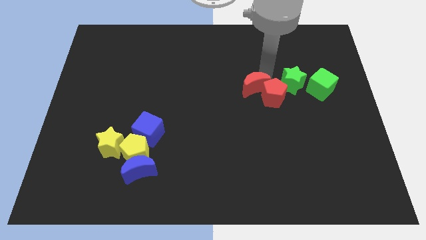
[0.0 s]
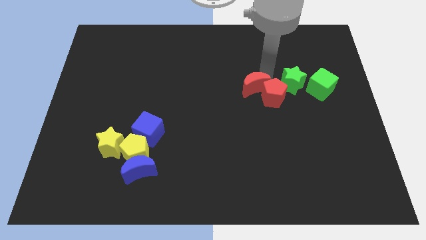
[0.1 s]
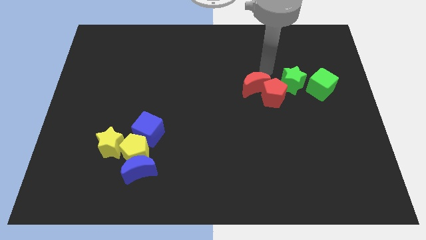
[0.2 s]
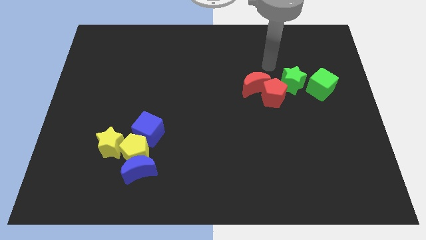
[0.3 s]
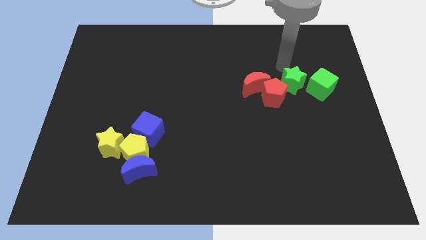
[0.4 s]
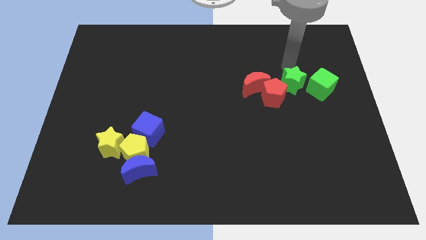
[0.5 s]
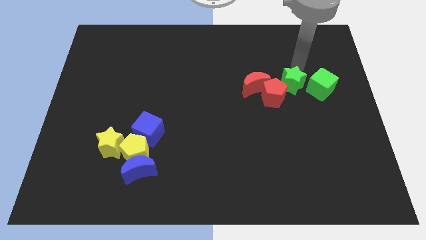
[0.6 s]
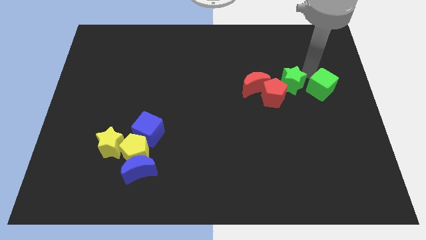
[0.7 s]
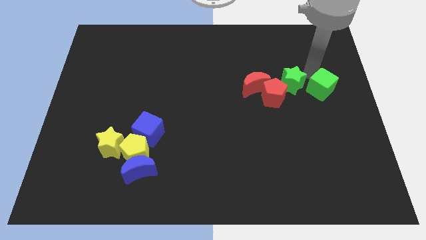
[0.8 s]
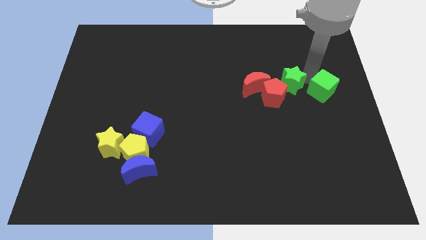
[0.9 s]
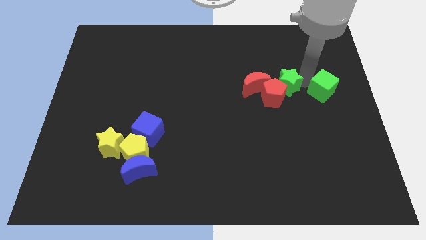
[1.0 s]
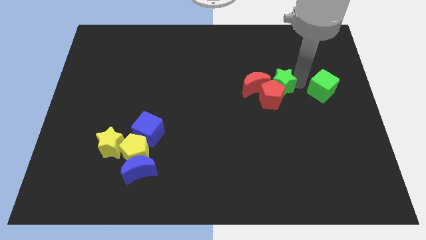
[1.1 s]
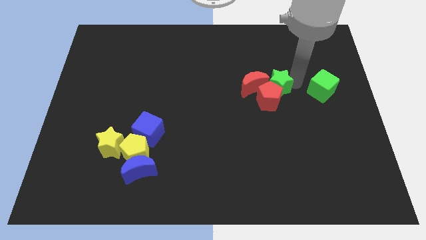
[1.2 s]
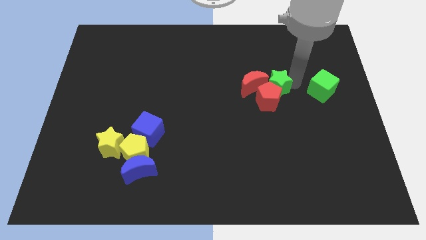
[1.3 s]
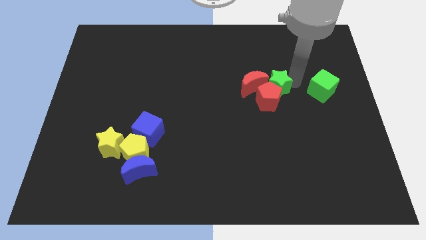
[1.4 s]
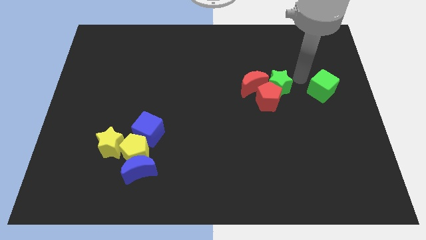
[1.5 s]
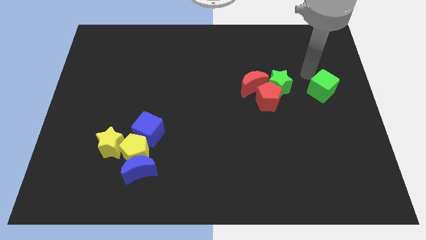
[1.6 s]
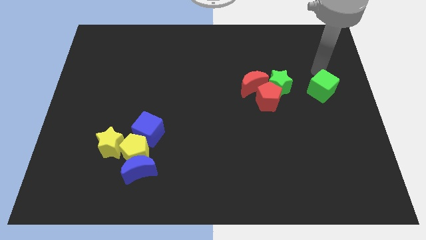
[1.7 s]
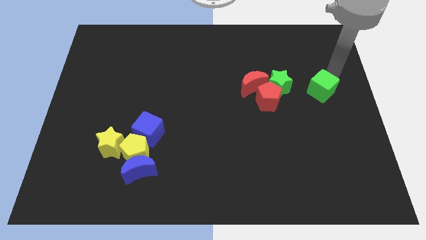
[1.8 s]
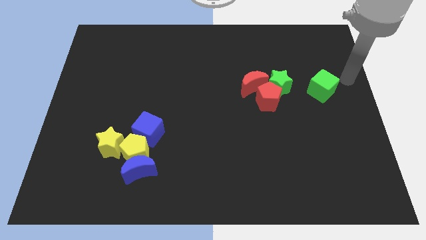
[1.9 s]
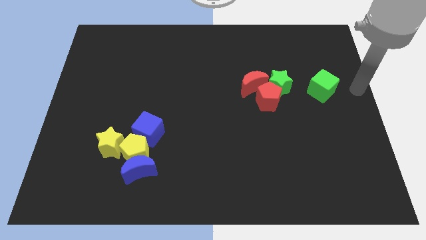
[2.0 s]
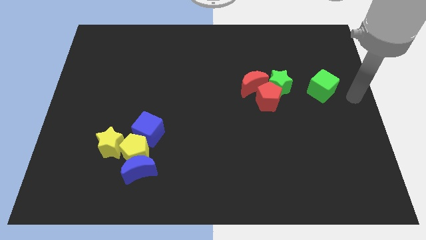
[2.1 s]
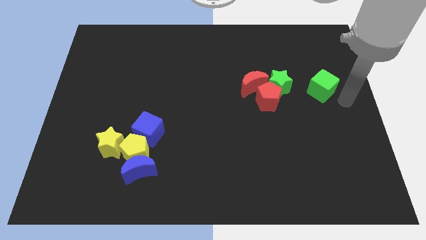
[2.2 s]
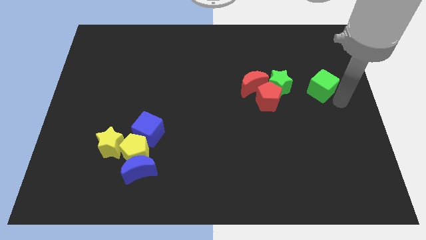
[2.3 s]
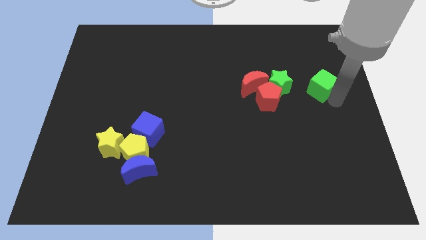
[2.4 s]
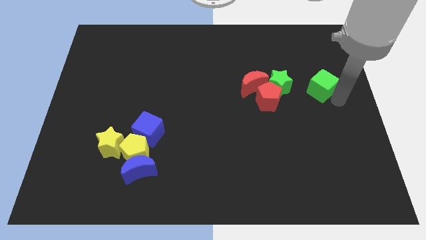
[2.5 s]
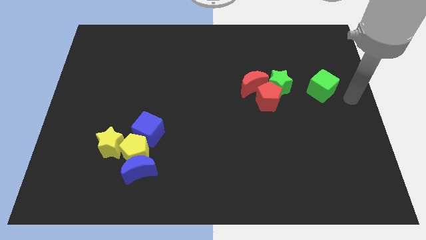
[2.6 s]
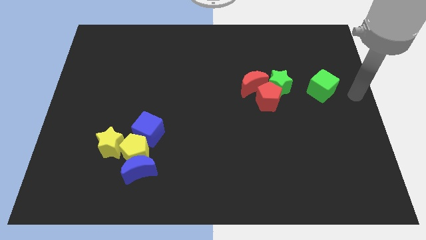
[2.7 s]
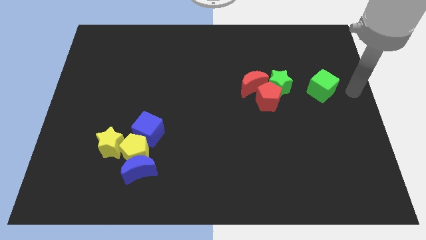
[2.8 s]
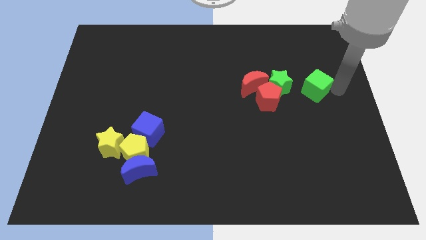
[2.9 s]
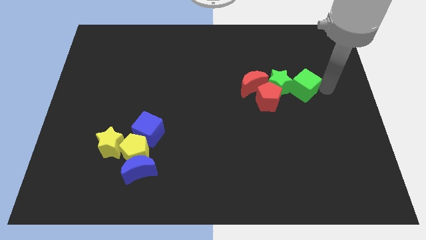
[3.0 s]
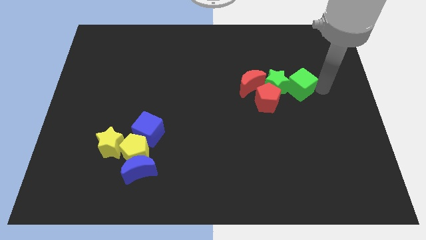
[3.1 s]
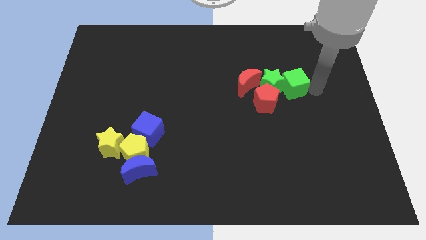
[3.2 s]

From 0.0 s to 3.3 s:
push the green star and green cube into the red pentagon

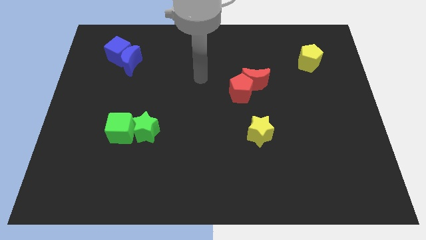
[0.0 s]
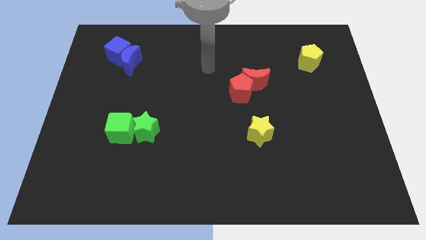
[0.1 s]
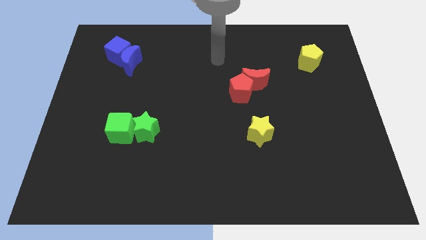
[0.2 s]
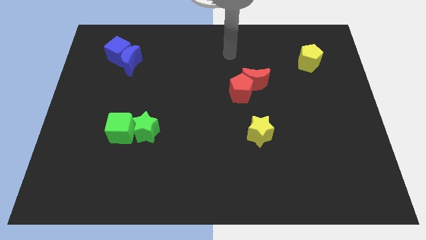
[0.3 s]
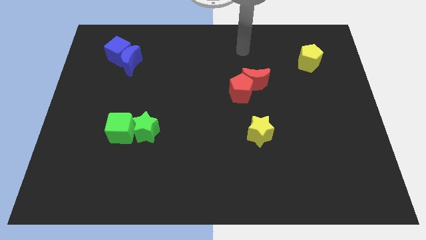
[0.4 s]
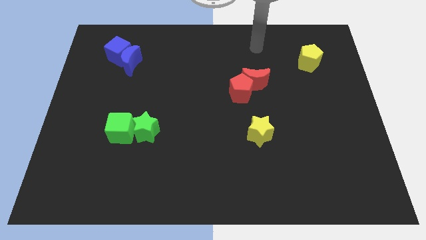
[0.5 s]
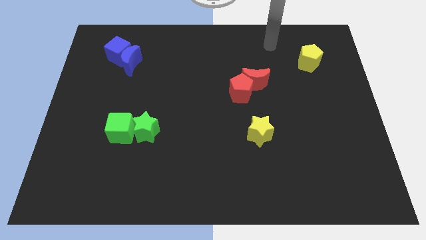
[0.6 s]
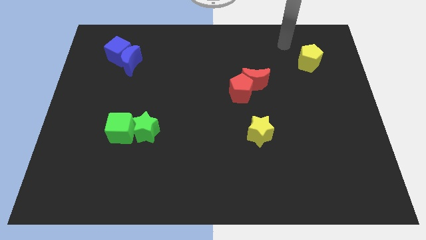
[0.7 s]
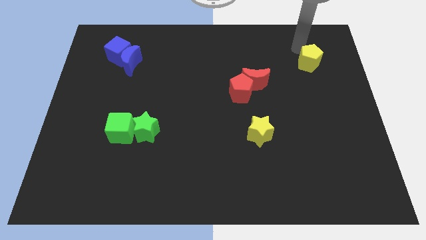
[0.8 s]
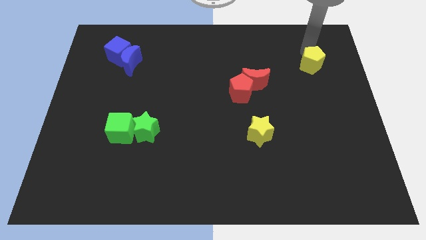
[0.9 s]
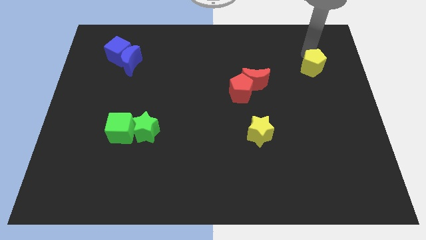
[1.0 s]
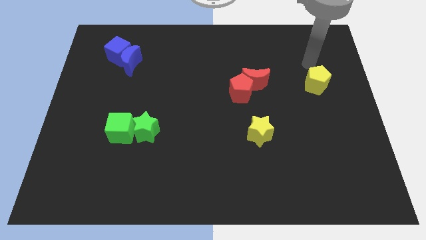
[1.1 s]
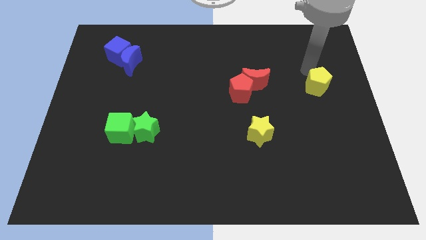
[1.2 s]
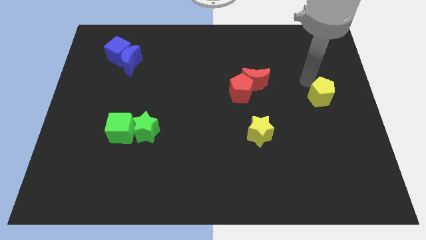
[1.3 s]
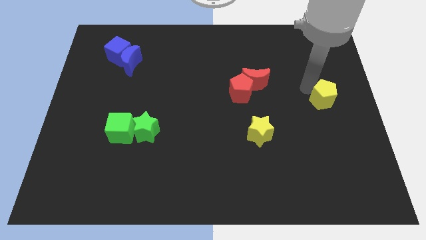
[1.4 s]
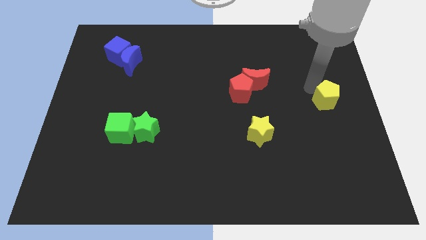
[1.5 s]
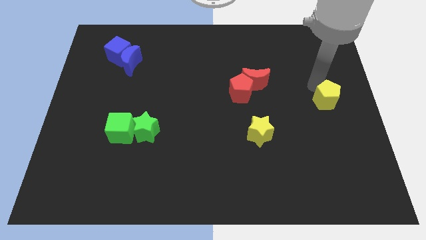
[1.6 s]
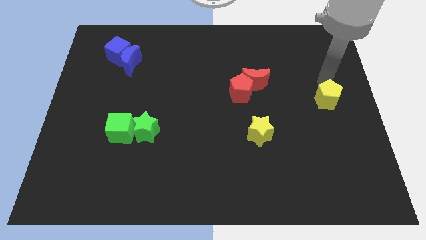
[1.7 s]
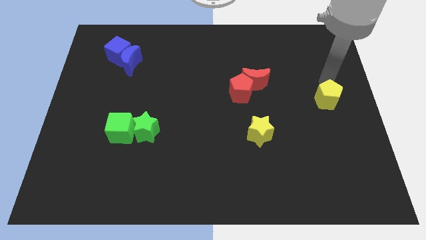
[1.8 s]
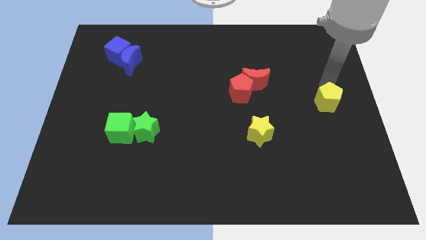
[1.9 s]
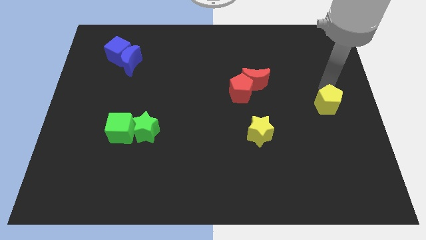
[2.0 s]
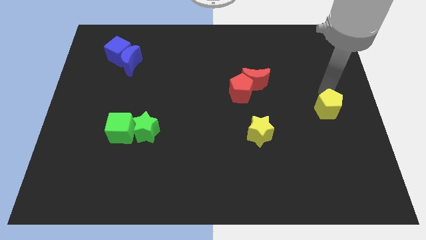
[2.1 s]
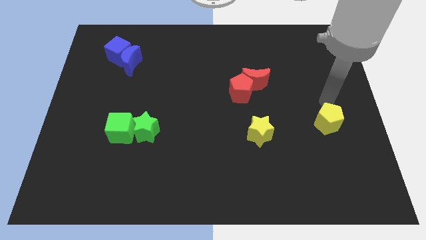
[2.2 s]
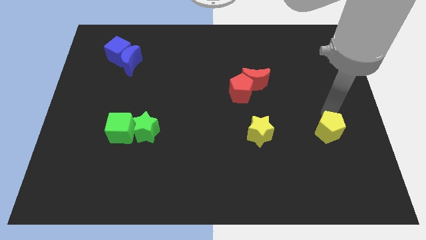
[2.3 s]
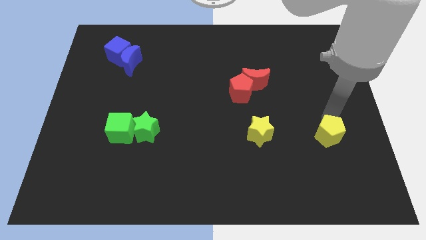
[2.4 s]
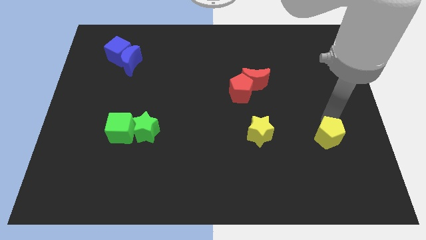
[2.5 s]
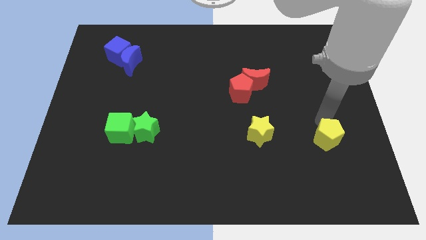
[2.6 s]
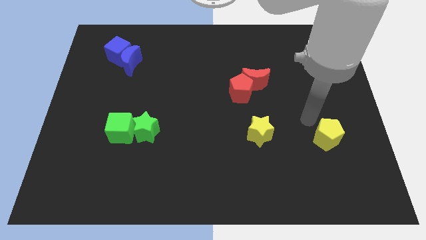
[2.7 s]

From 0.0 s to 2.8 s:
move the yellow pentagon to the right of the yellow star

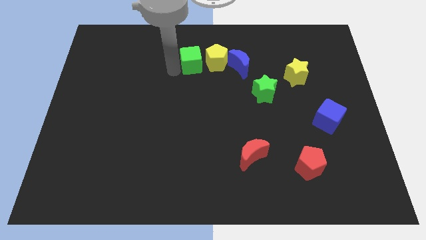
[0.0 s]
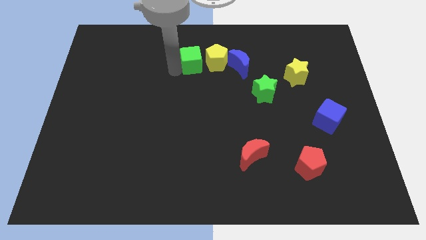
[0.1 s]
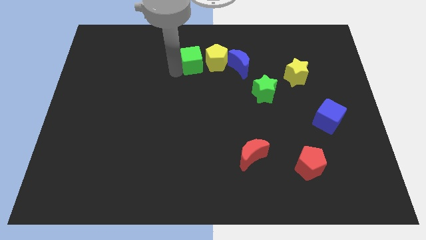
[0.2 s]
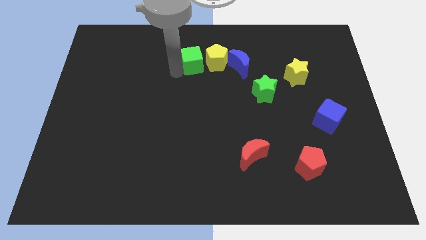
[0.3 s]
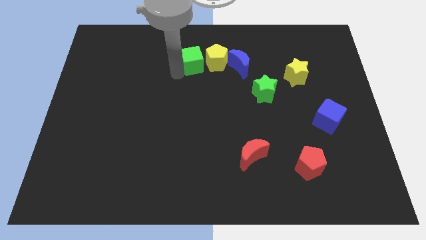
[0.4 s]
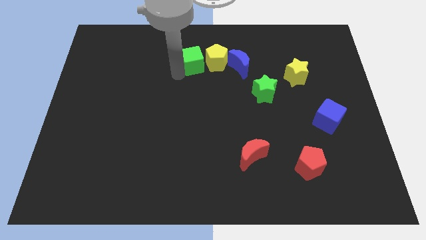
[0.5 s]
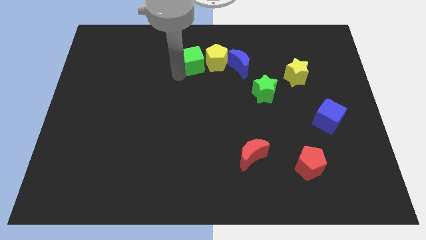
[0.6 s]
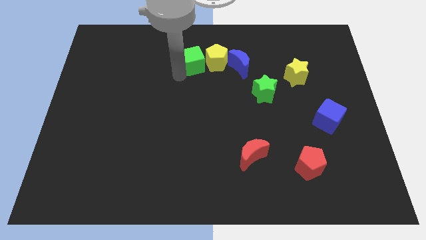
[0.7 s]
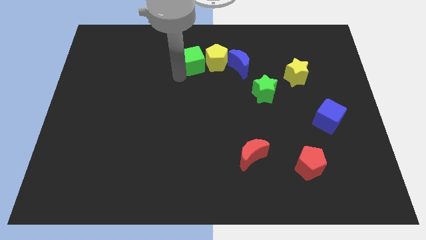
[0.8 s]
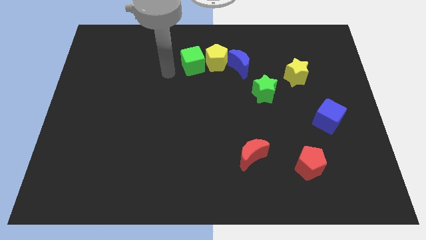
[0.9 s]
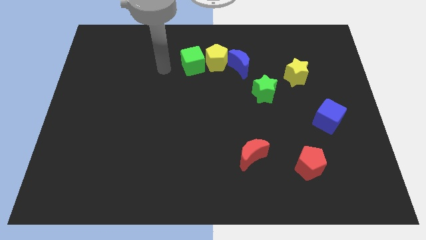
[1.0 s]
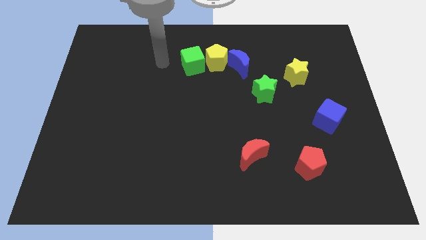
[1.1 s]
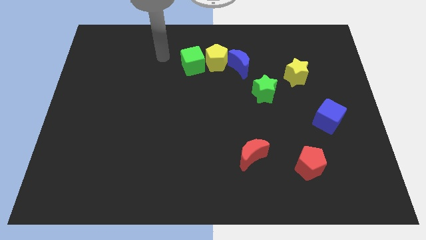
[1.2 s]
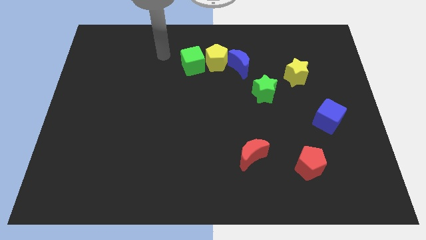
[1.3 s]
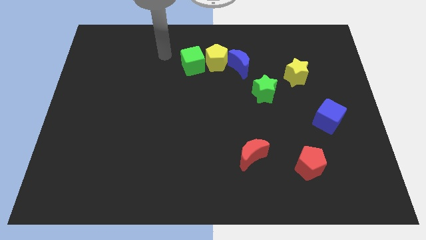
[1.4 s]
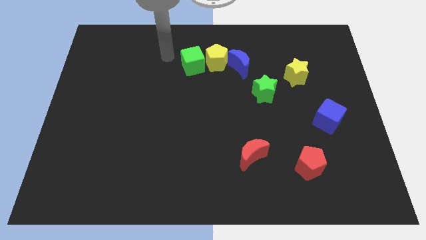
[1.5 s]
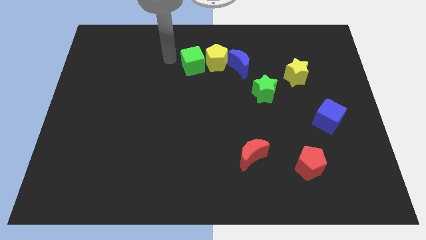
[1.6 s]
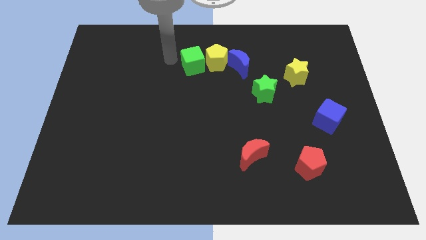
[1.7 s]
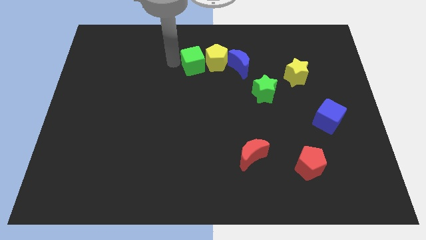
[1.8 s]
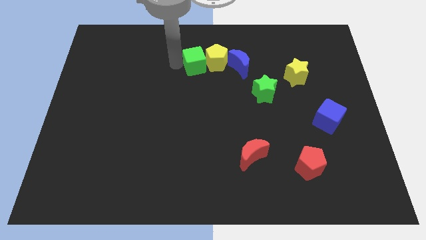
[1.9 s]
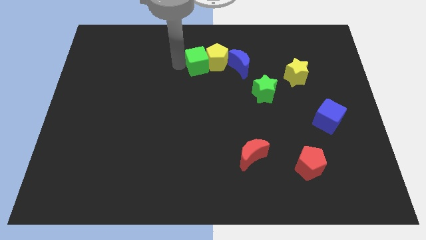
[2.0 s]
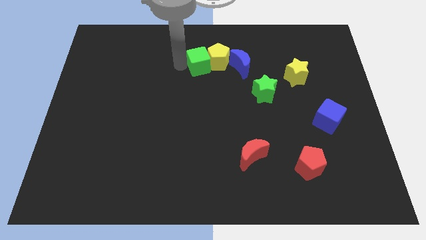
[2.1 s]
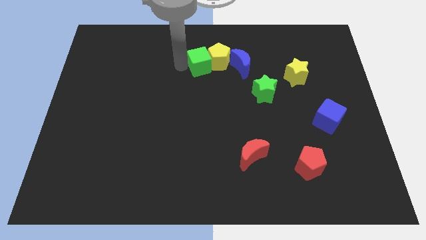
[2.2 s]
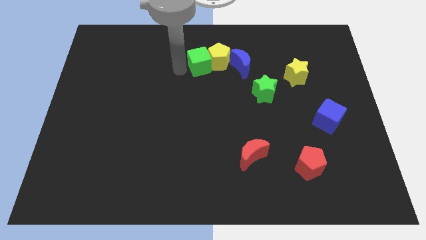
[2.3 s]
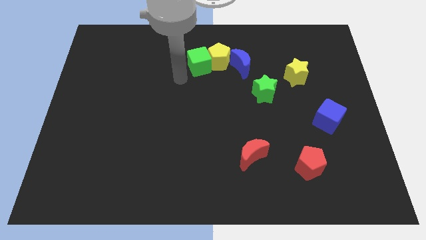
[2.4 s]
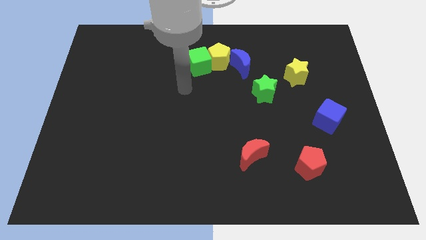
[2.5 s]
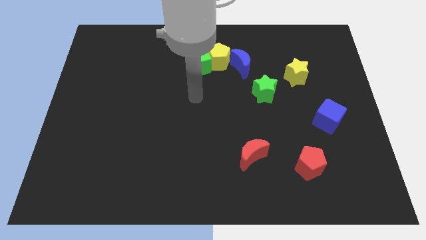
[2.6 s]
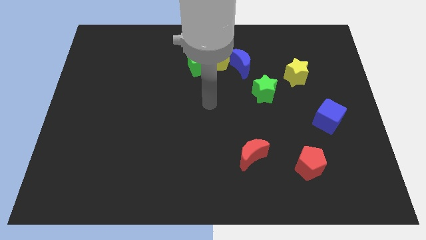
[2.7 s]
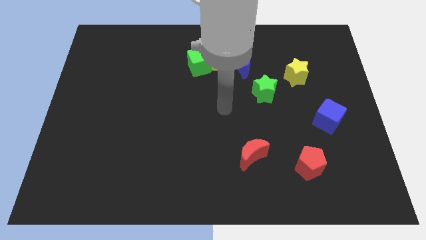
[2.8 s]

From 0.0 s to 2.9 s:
push the green cube into the yellow pentagon
